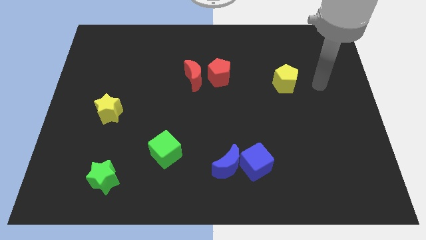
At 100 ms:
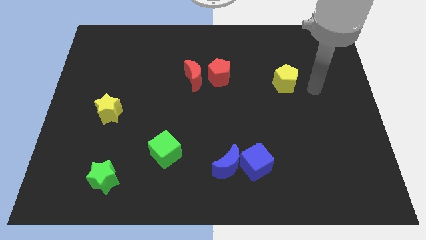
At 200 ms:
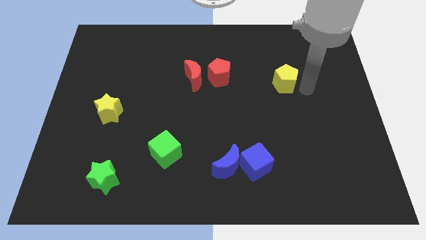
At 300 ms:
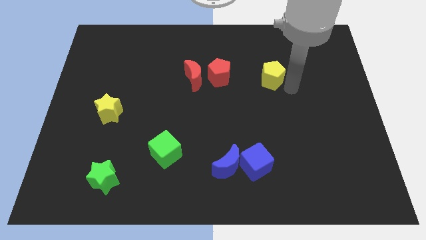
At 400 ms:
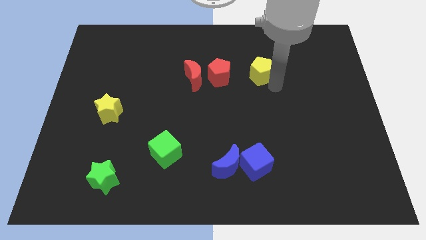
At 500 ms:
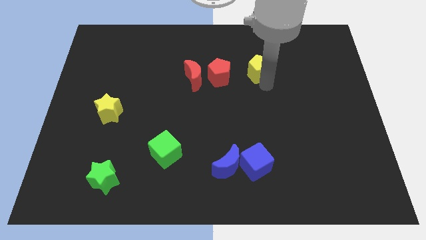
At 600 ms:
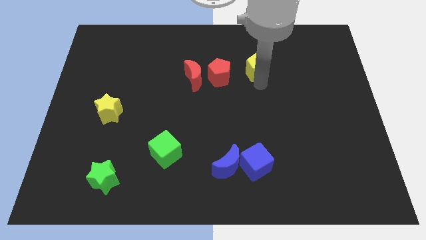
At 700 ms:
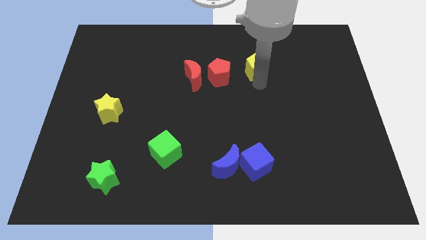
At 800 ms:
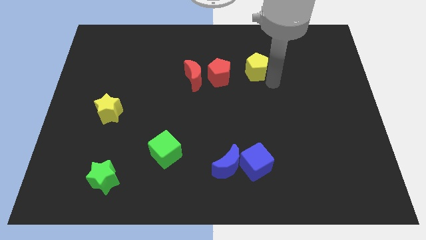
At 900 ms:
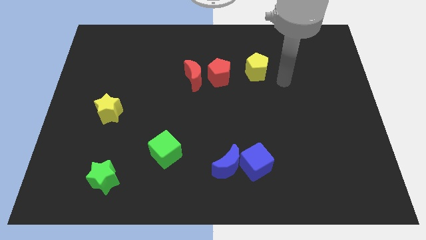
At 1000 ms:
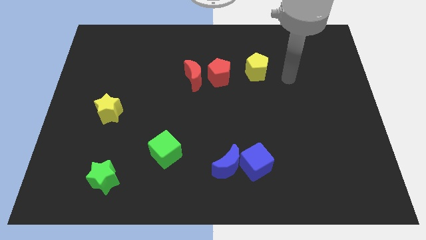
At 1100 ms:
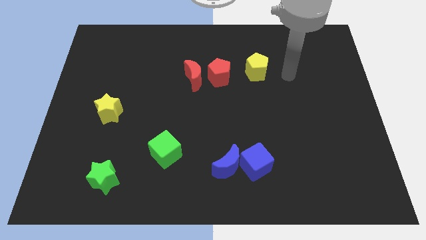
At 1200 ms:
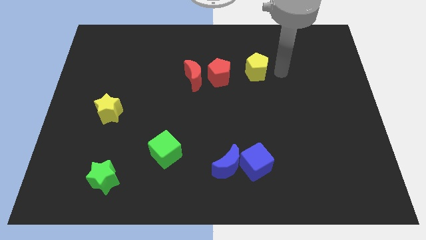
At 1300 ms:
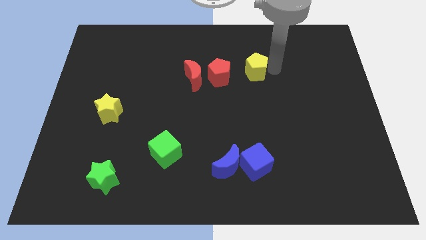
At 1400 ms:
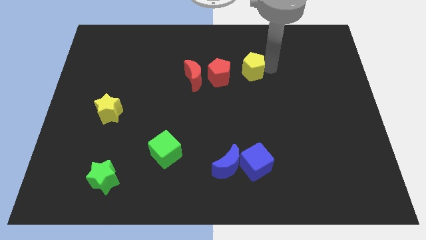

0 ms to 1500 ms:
move yellow pentagon towards red pentagon

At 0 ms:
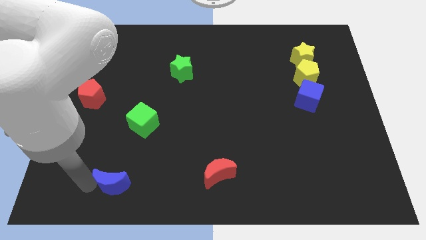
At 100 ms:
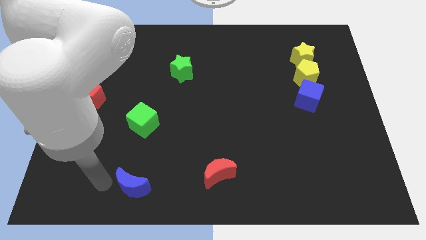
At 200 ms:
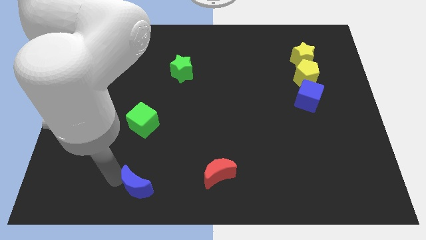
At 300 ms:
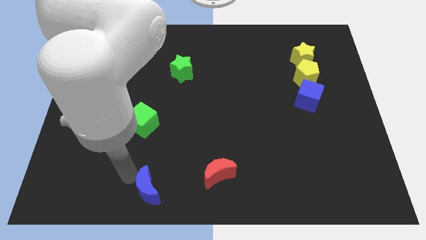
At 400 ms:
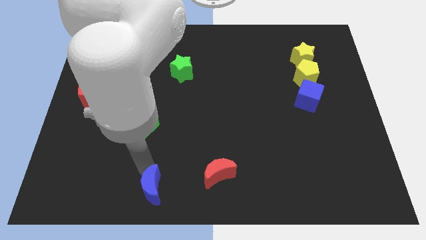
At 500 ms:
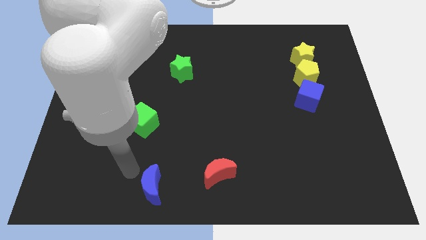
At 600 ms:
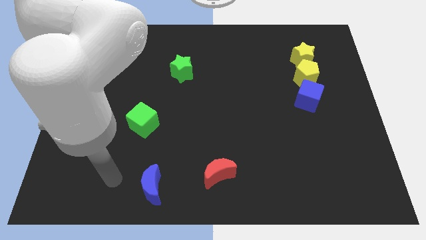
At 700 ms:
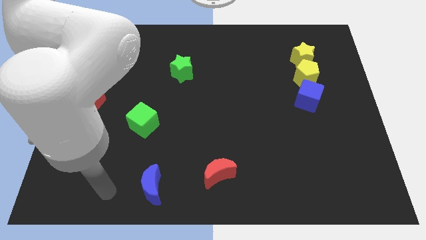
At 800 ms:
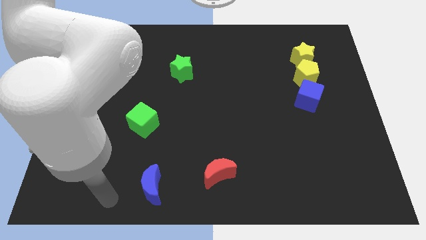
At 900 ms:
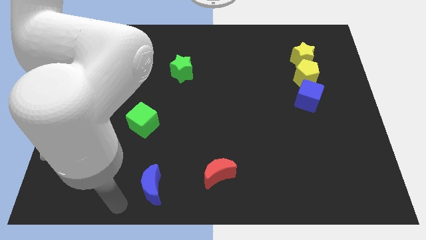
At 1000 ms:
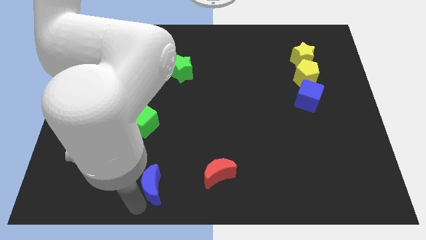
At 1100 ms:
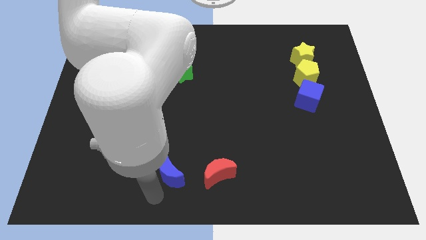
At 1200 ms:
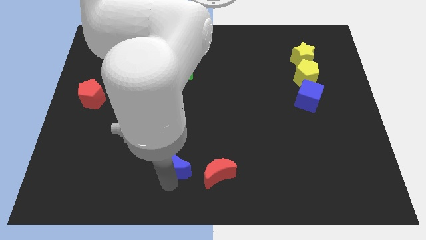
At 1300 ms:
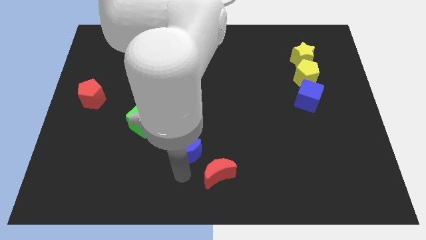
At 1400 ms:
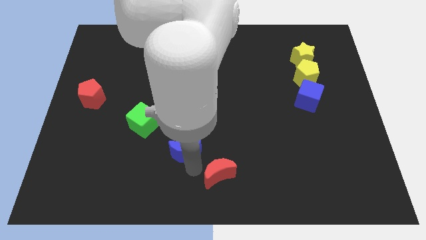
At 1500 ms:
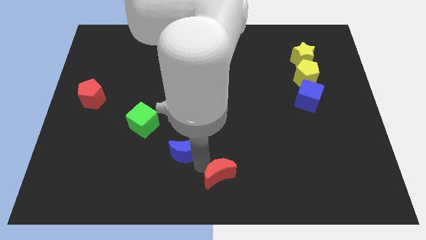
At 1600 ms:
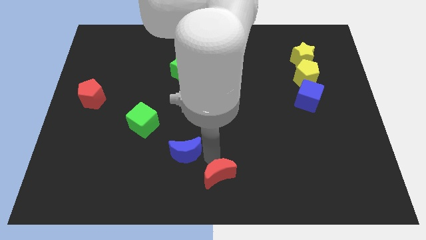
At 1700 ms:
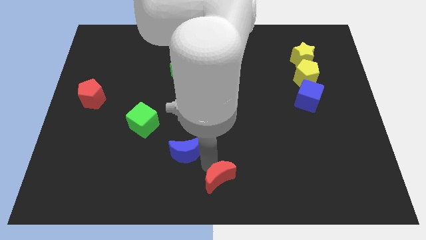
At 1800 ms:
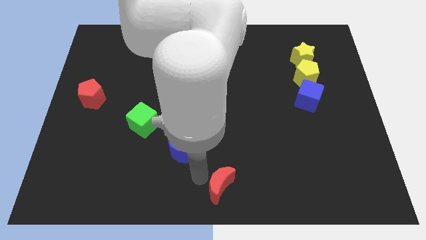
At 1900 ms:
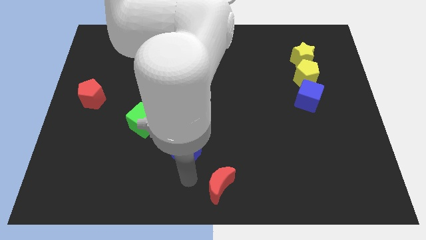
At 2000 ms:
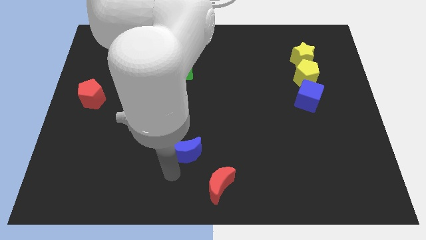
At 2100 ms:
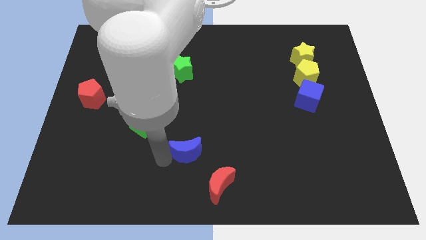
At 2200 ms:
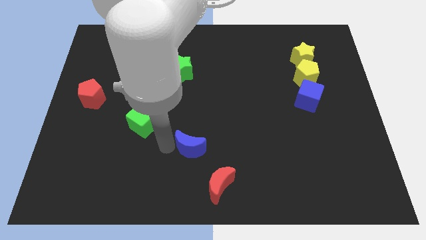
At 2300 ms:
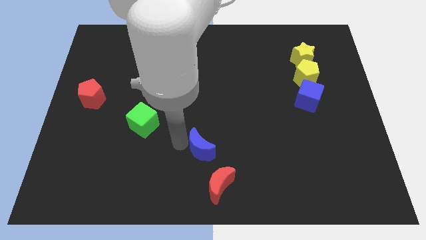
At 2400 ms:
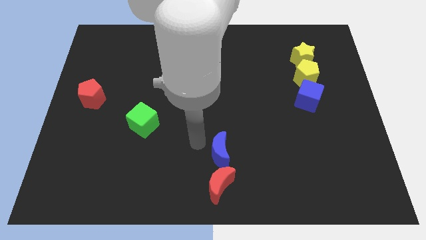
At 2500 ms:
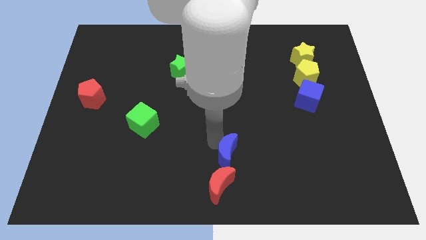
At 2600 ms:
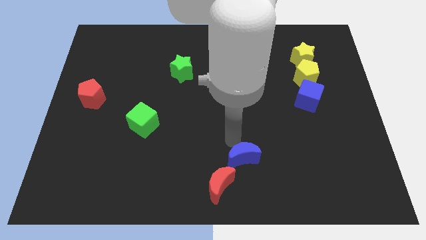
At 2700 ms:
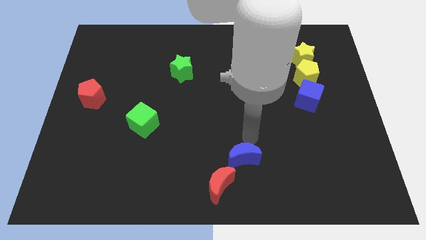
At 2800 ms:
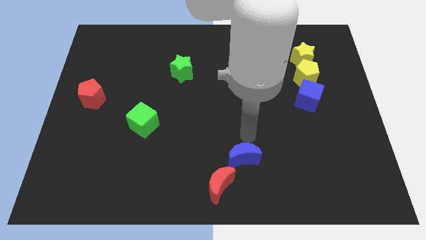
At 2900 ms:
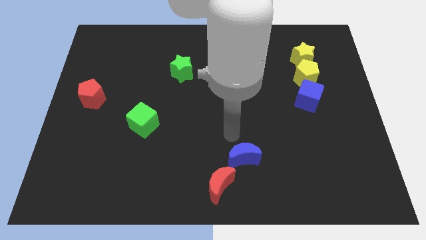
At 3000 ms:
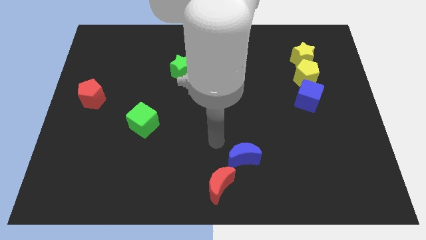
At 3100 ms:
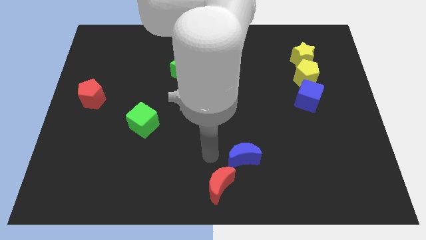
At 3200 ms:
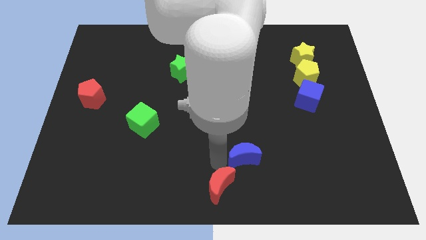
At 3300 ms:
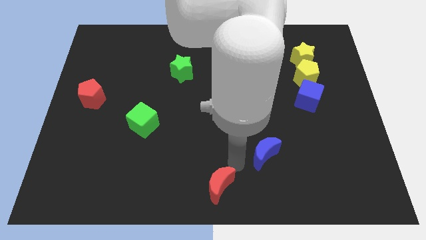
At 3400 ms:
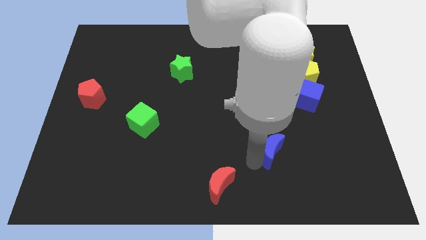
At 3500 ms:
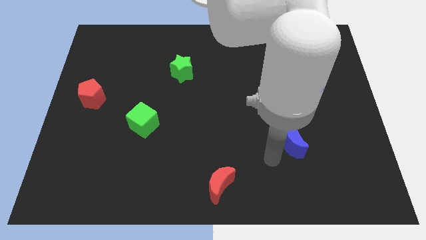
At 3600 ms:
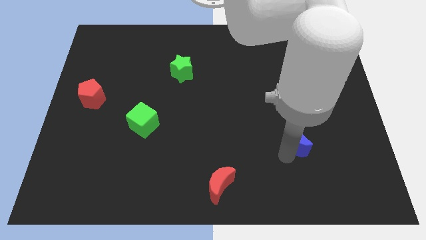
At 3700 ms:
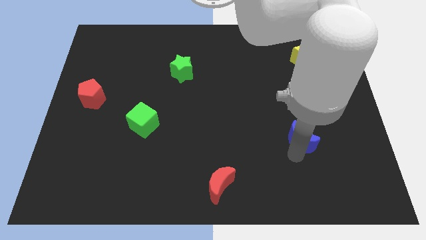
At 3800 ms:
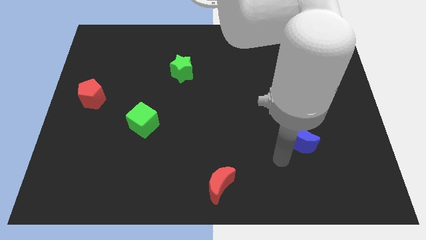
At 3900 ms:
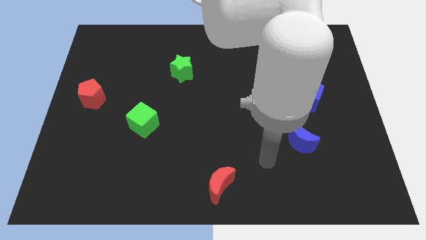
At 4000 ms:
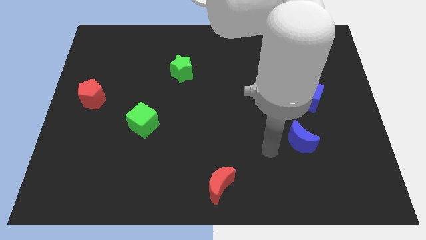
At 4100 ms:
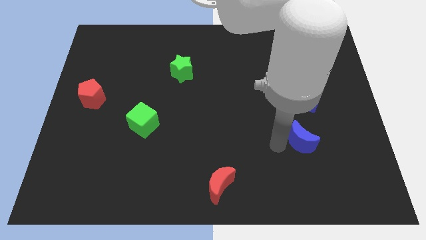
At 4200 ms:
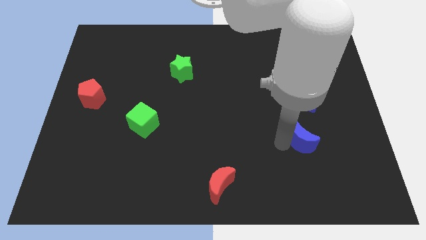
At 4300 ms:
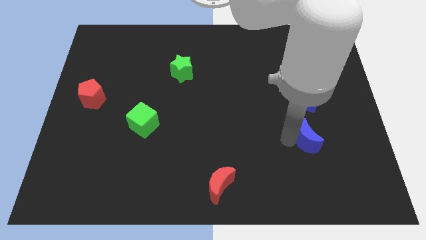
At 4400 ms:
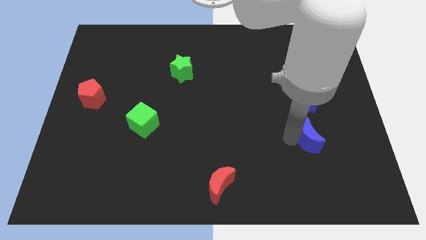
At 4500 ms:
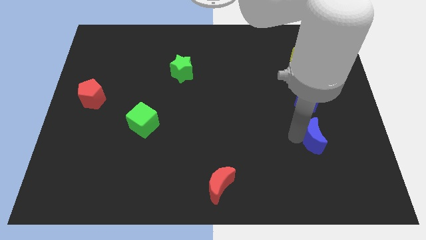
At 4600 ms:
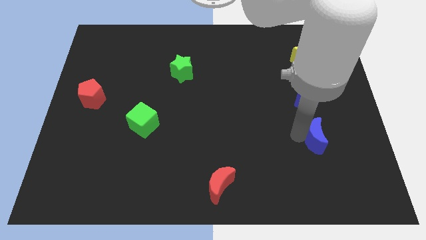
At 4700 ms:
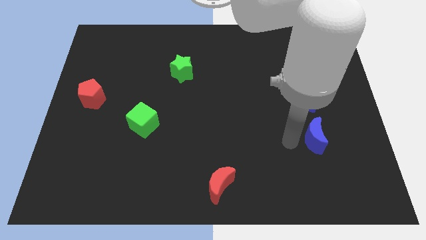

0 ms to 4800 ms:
push the blue moon and place it below the blue cube

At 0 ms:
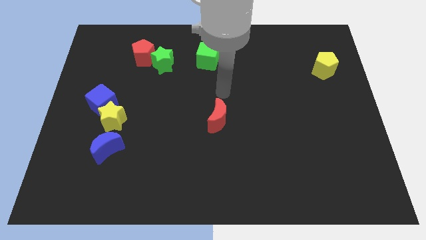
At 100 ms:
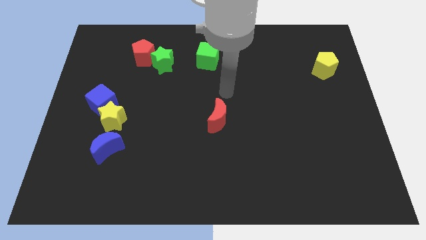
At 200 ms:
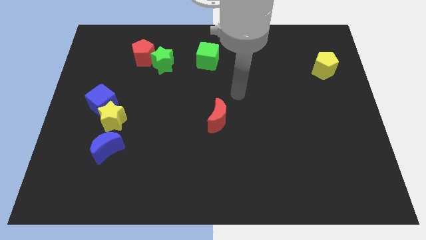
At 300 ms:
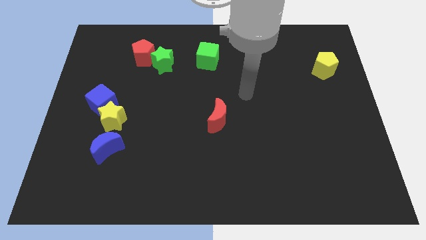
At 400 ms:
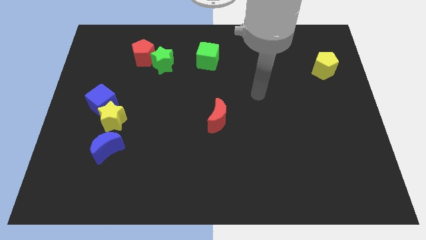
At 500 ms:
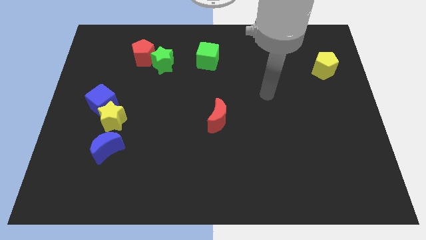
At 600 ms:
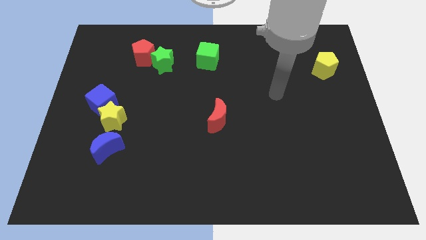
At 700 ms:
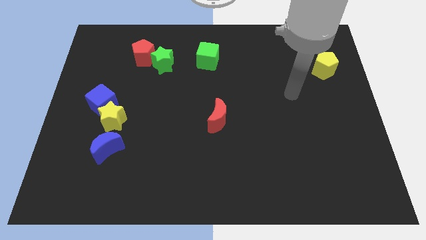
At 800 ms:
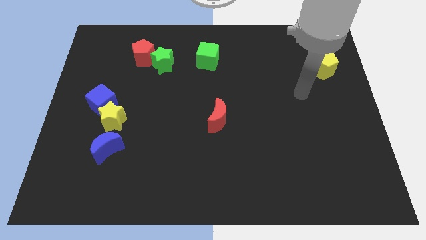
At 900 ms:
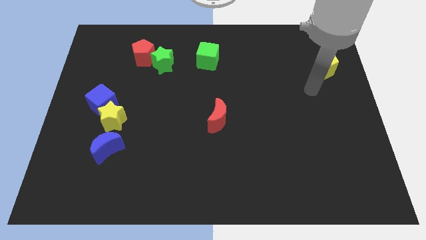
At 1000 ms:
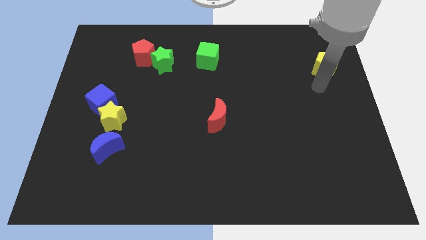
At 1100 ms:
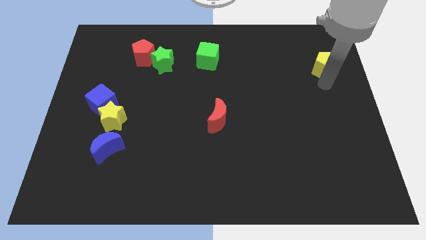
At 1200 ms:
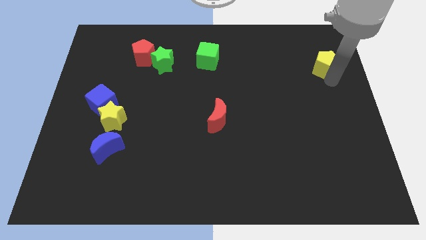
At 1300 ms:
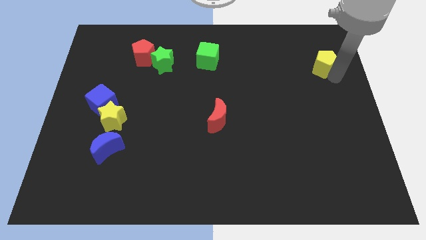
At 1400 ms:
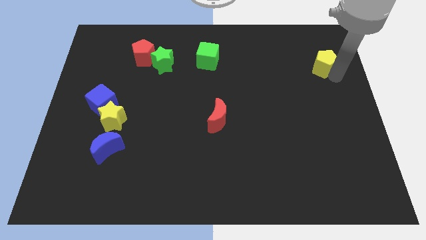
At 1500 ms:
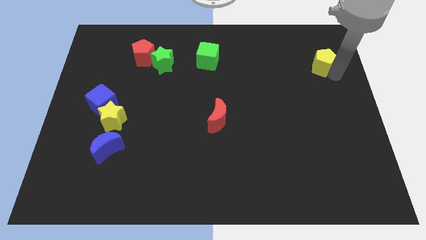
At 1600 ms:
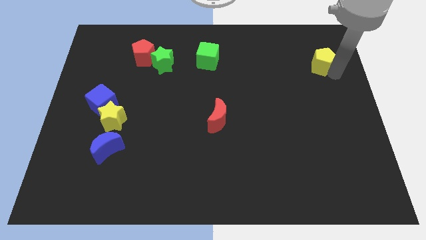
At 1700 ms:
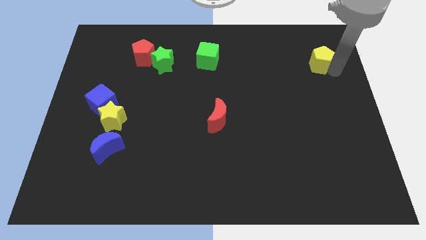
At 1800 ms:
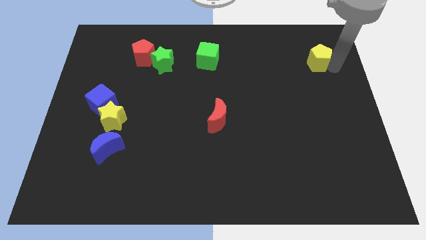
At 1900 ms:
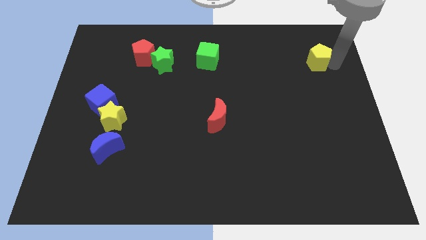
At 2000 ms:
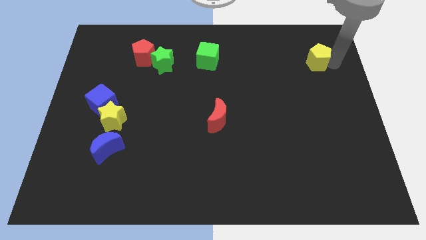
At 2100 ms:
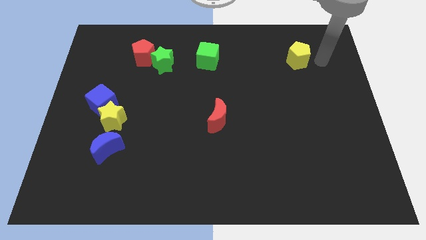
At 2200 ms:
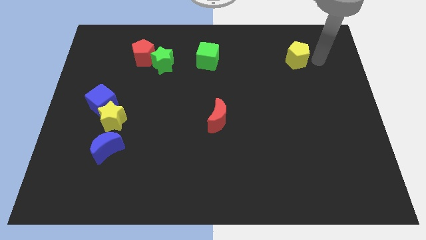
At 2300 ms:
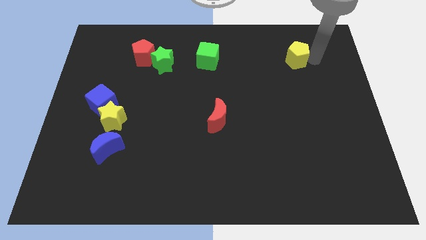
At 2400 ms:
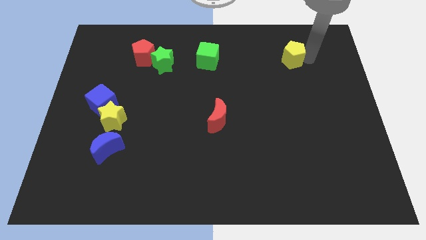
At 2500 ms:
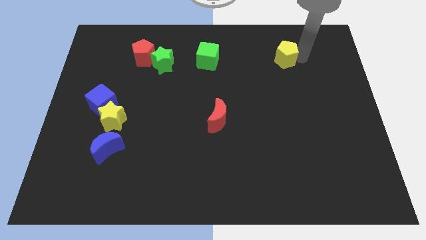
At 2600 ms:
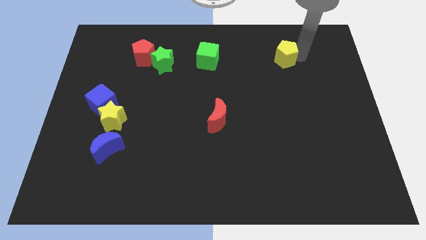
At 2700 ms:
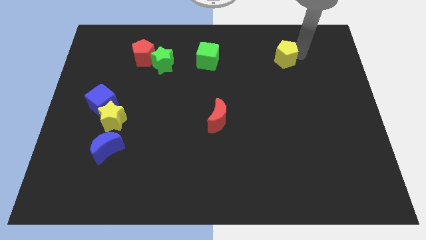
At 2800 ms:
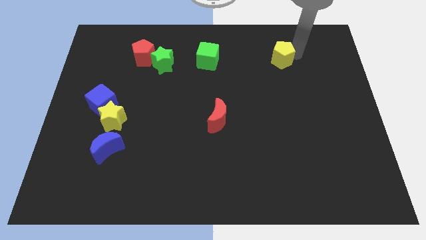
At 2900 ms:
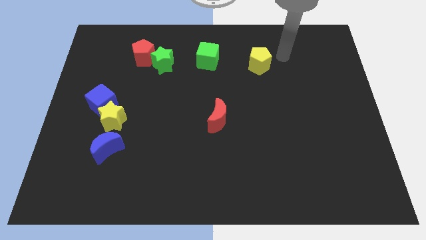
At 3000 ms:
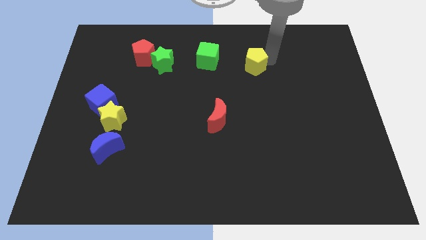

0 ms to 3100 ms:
move the yellow pentagon diagonal to the right side of the green cube
